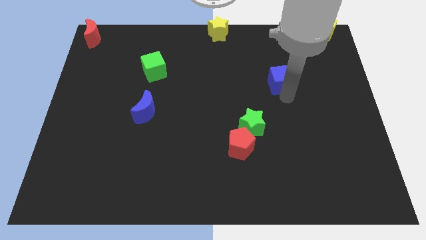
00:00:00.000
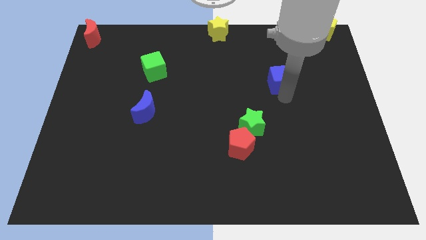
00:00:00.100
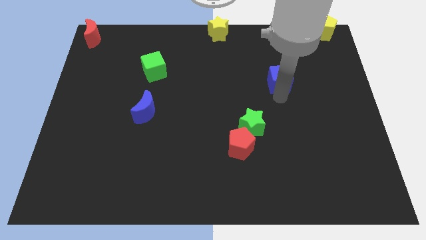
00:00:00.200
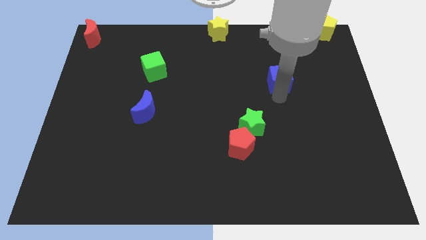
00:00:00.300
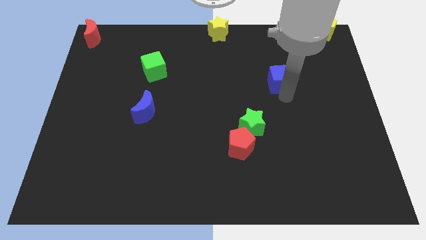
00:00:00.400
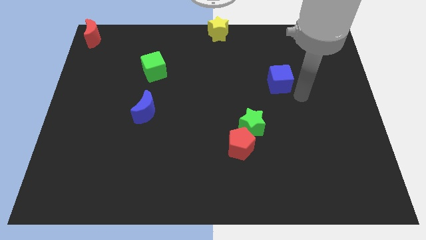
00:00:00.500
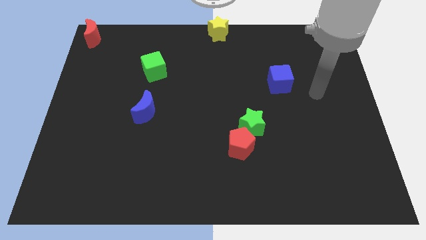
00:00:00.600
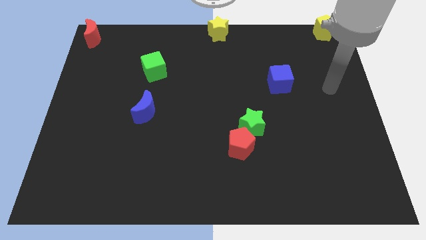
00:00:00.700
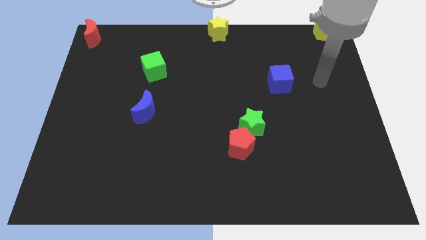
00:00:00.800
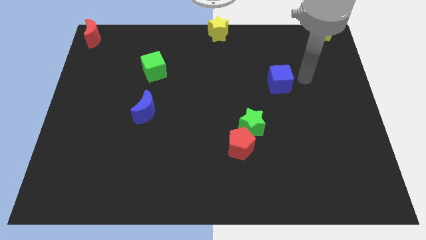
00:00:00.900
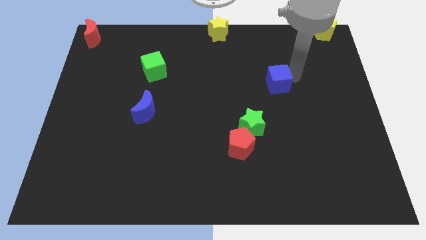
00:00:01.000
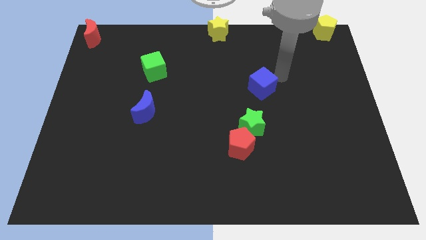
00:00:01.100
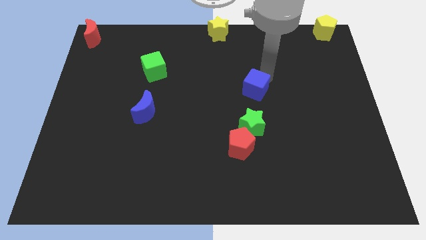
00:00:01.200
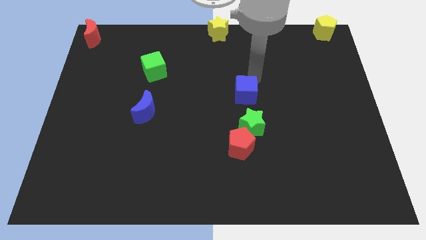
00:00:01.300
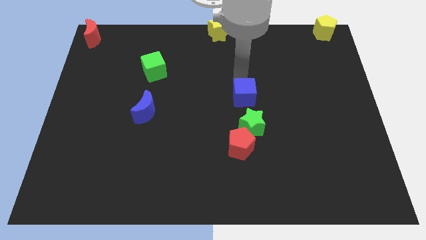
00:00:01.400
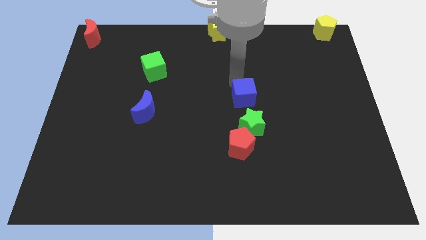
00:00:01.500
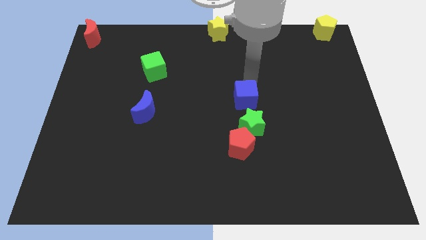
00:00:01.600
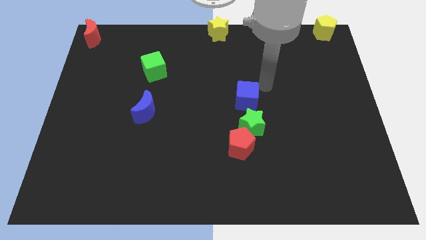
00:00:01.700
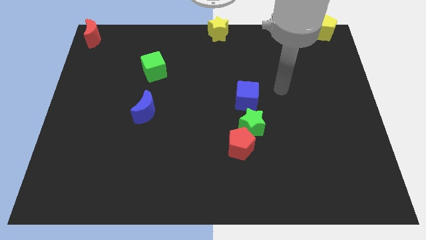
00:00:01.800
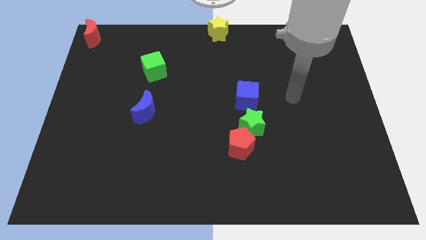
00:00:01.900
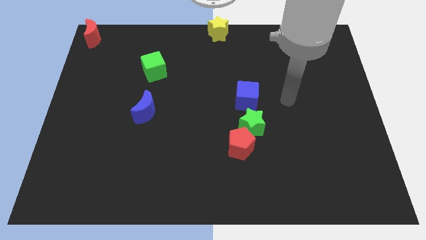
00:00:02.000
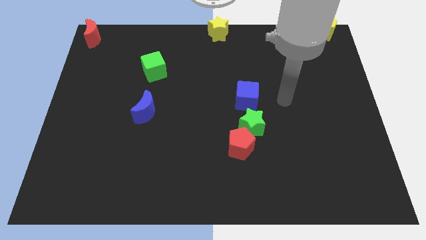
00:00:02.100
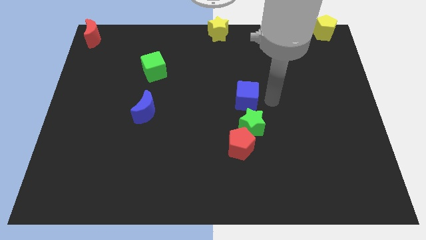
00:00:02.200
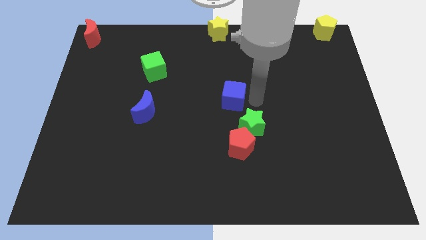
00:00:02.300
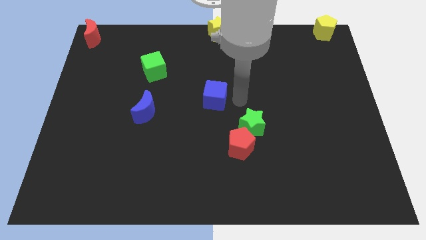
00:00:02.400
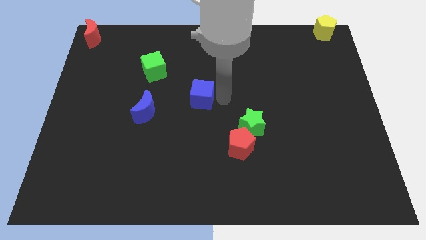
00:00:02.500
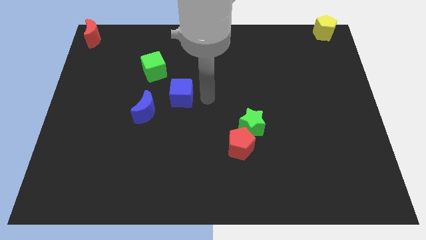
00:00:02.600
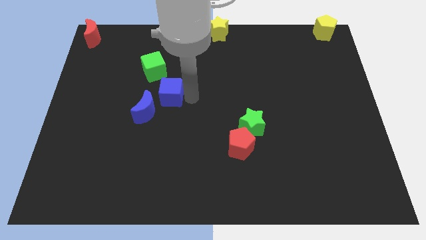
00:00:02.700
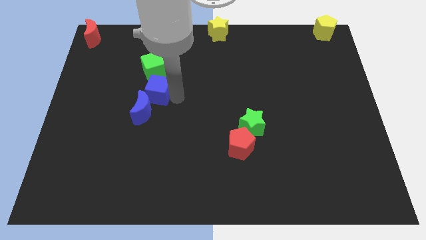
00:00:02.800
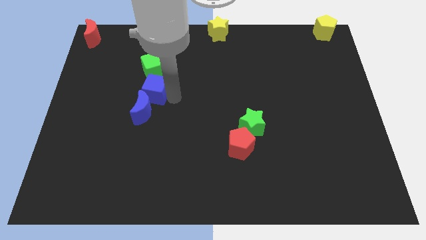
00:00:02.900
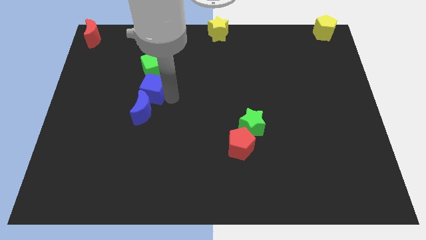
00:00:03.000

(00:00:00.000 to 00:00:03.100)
place blue cube to the bottom of green cube

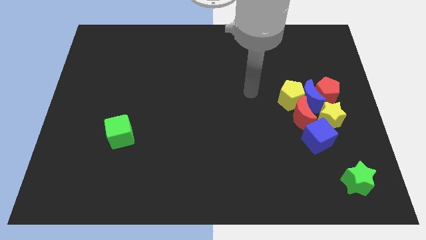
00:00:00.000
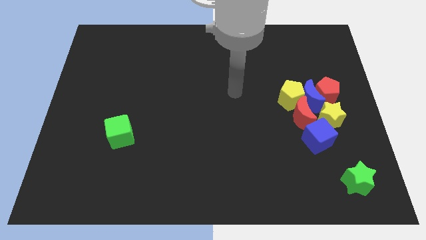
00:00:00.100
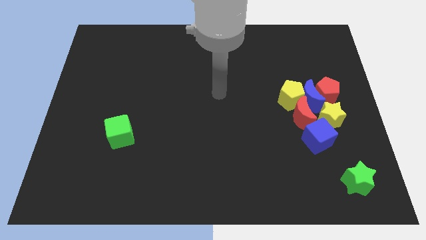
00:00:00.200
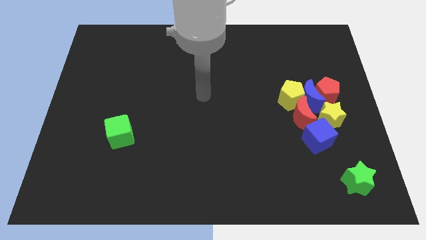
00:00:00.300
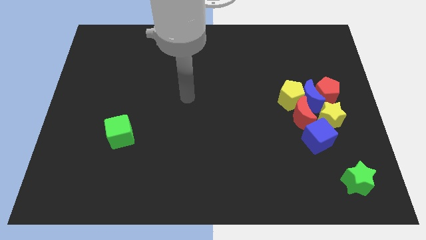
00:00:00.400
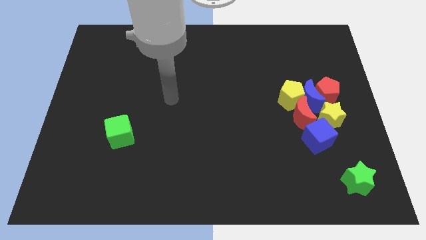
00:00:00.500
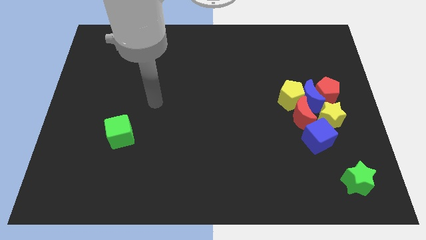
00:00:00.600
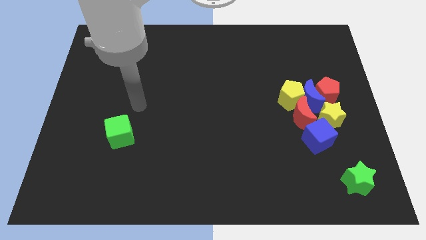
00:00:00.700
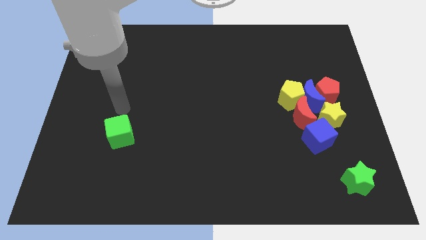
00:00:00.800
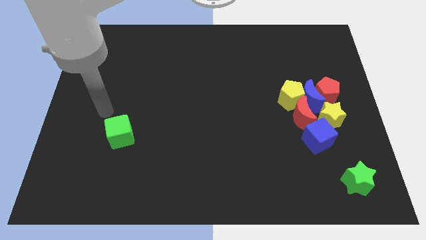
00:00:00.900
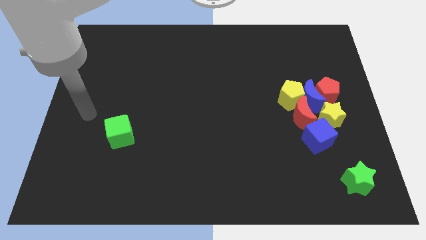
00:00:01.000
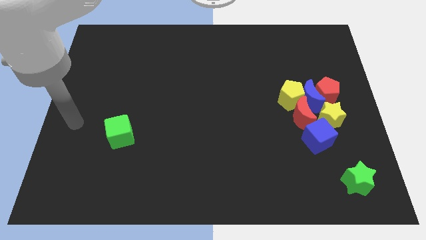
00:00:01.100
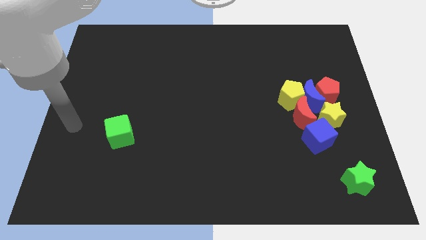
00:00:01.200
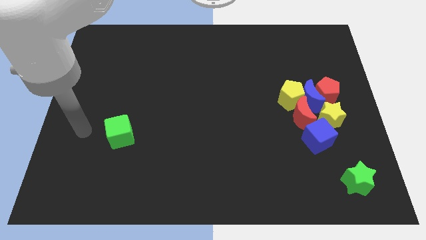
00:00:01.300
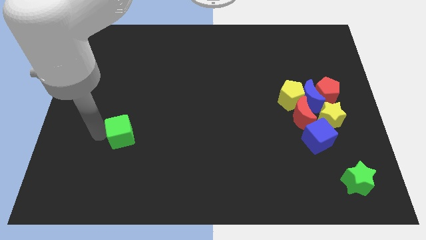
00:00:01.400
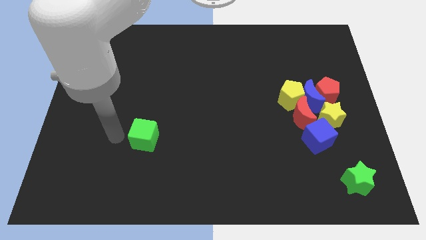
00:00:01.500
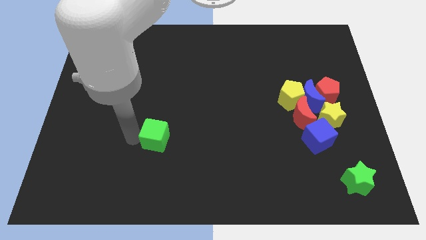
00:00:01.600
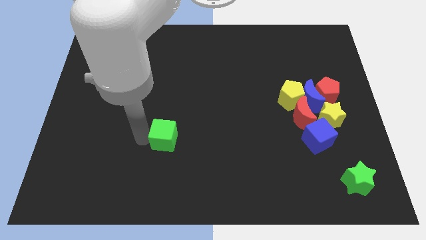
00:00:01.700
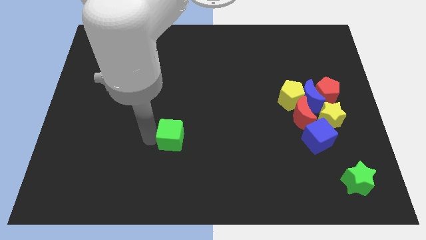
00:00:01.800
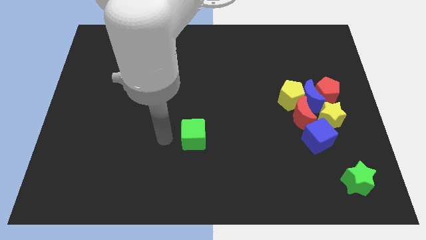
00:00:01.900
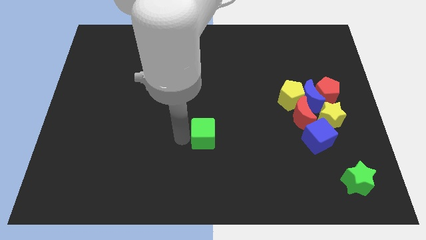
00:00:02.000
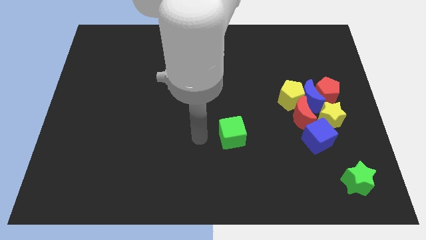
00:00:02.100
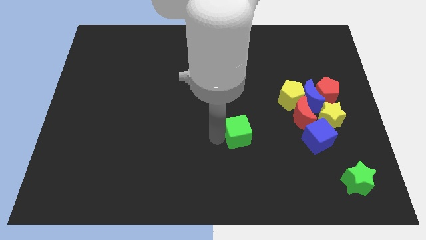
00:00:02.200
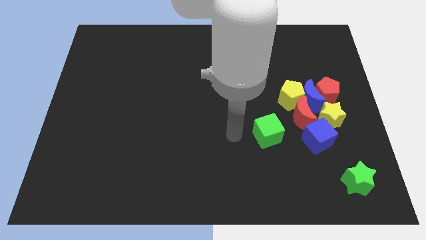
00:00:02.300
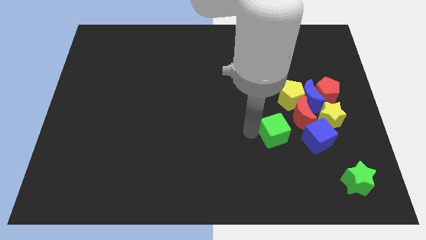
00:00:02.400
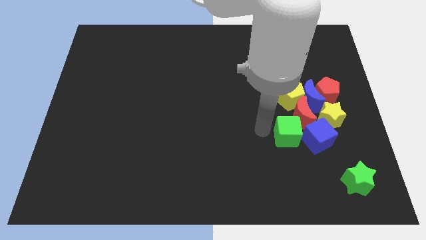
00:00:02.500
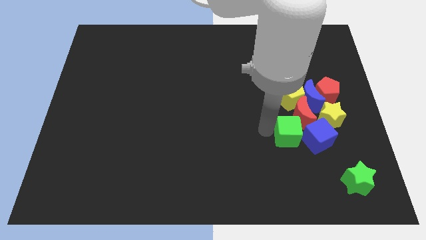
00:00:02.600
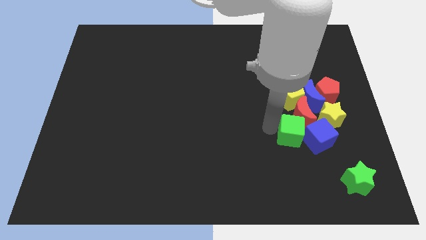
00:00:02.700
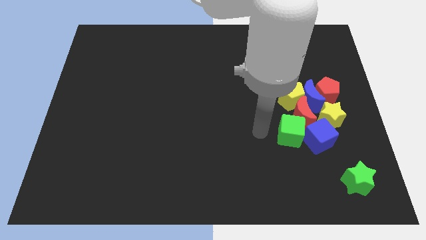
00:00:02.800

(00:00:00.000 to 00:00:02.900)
push the green cube into blue cube

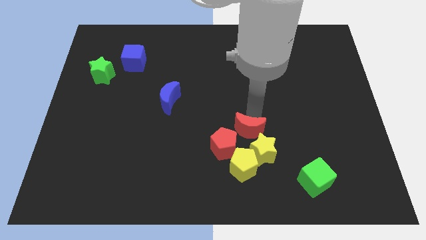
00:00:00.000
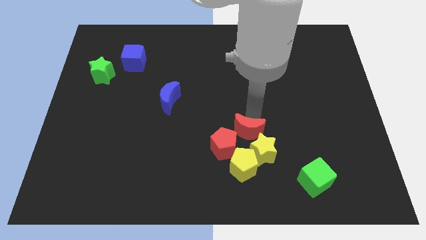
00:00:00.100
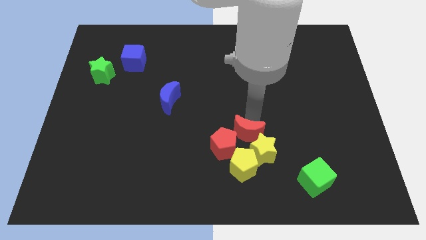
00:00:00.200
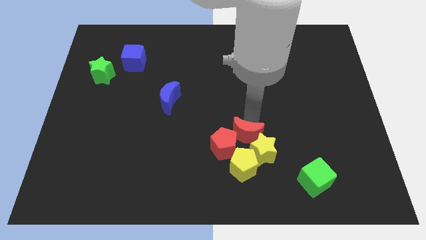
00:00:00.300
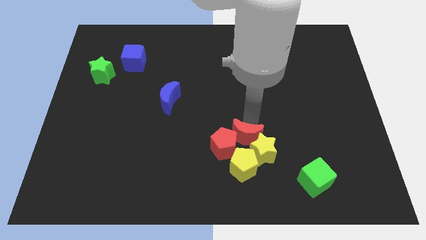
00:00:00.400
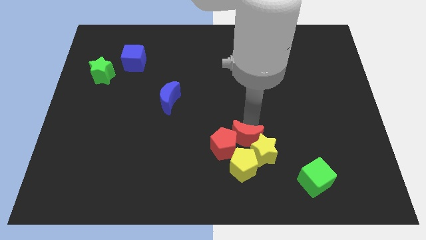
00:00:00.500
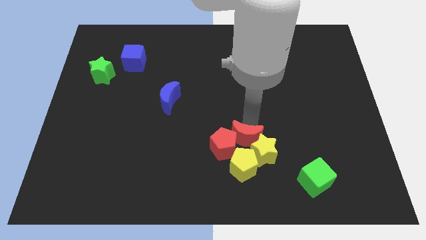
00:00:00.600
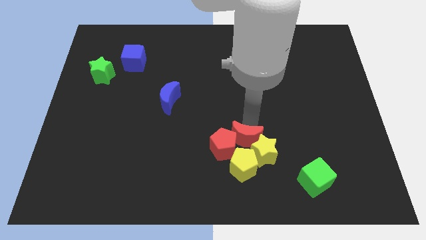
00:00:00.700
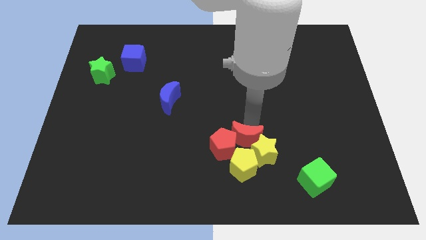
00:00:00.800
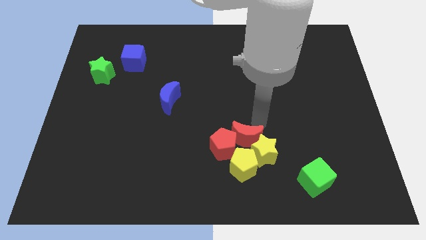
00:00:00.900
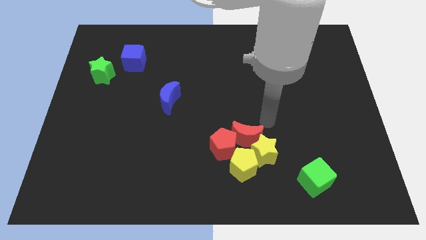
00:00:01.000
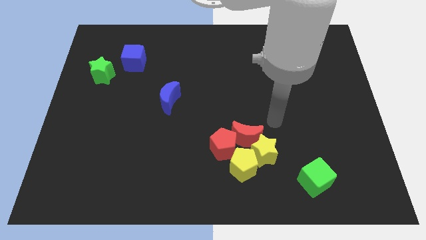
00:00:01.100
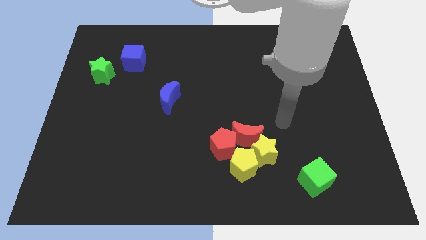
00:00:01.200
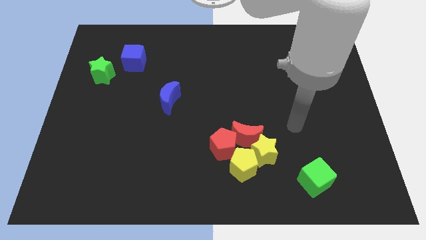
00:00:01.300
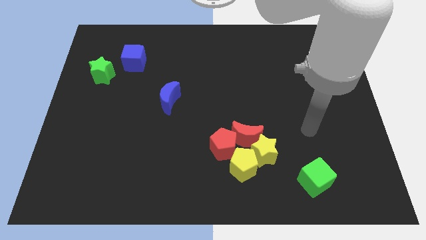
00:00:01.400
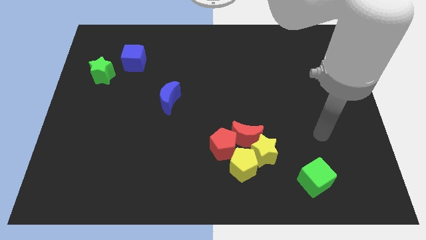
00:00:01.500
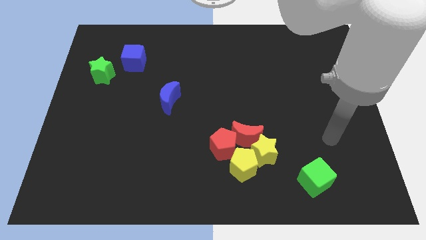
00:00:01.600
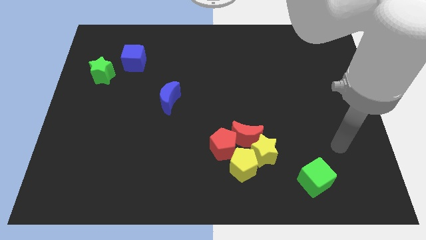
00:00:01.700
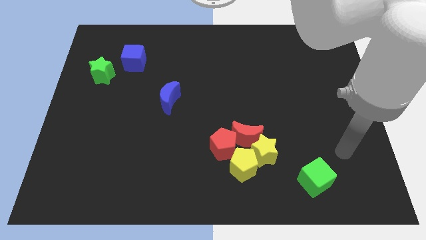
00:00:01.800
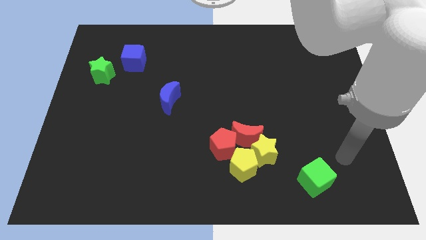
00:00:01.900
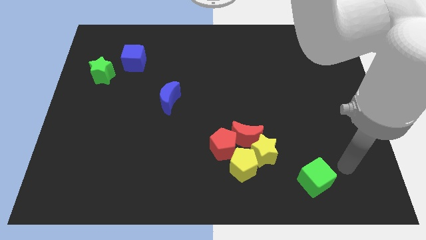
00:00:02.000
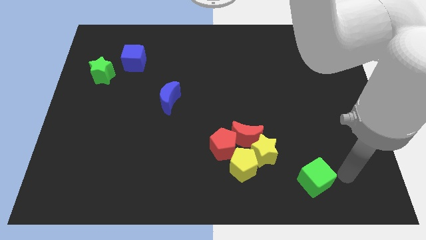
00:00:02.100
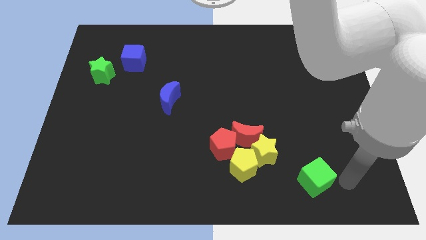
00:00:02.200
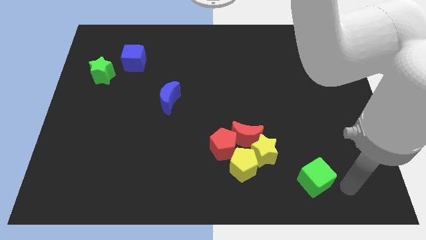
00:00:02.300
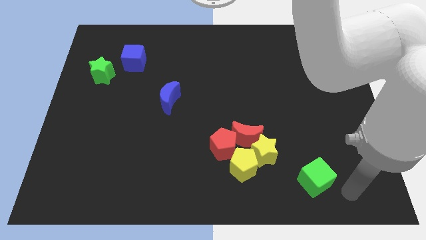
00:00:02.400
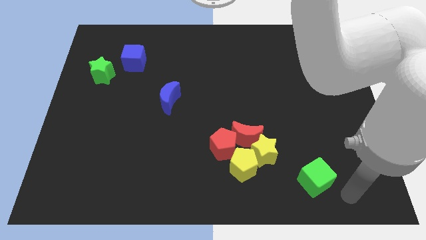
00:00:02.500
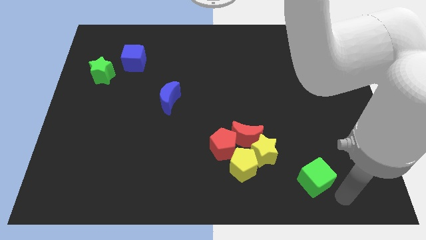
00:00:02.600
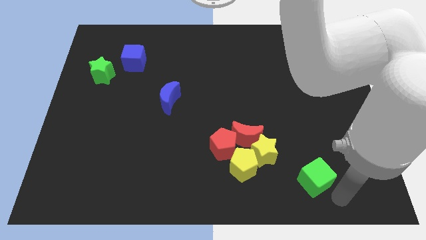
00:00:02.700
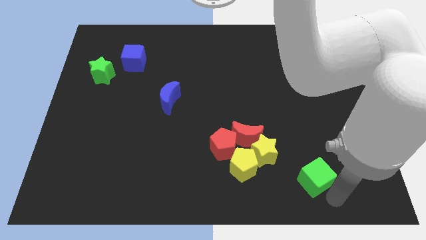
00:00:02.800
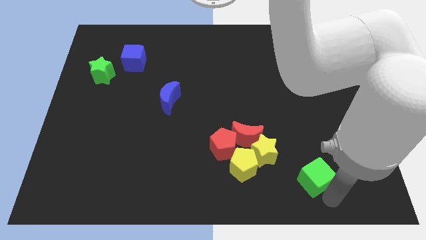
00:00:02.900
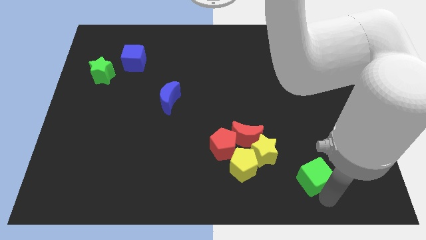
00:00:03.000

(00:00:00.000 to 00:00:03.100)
move your arm to the bottom of the green cube
